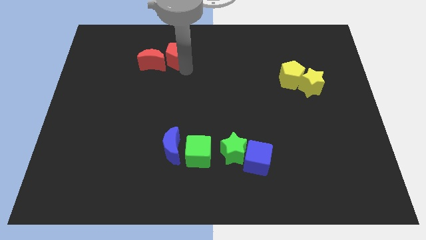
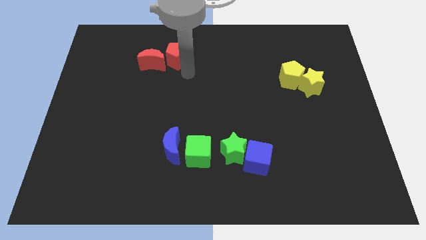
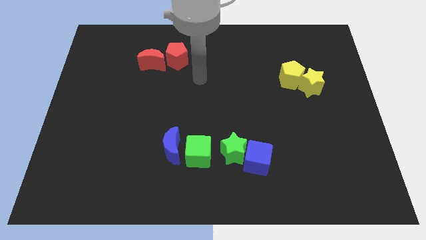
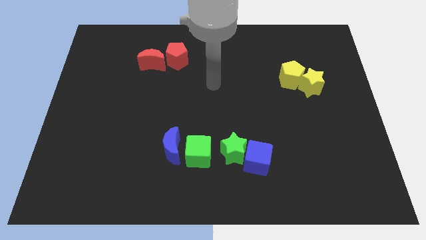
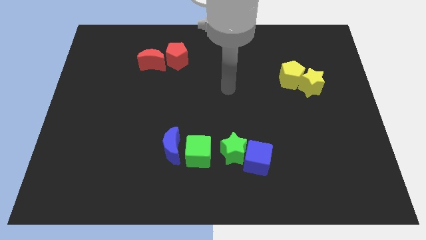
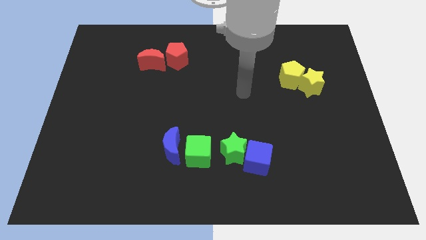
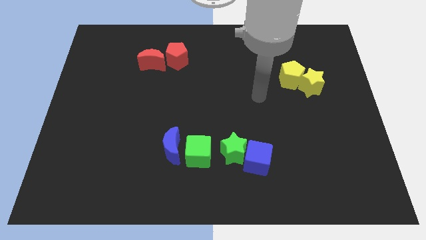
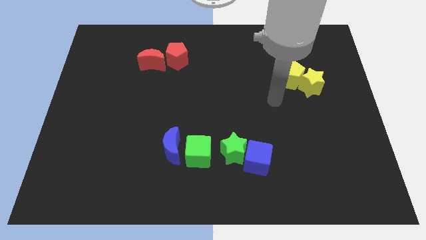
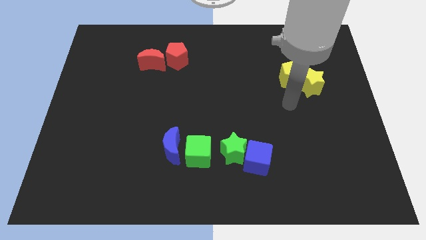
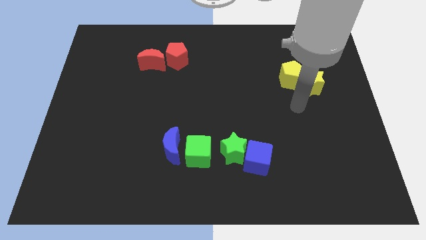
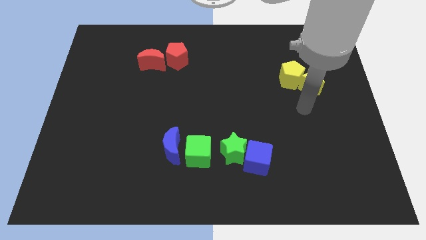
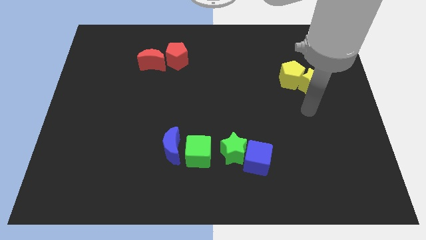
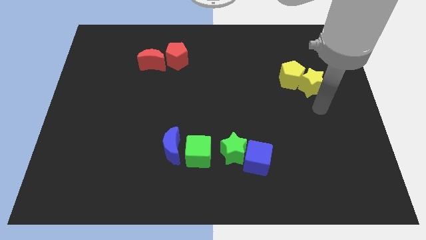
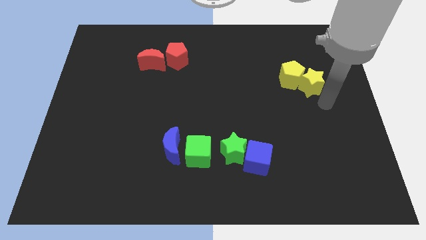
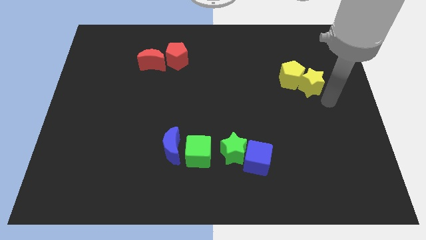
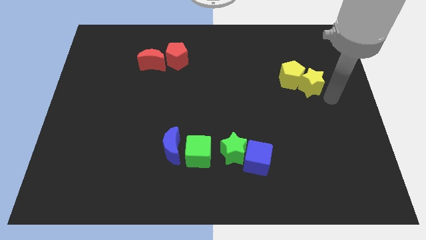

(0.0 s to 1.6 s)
move your arm towards the yellow blocks

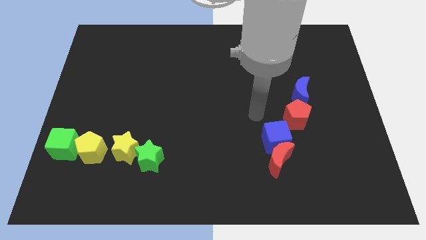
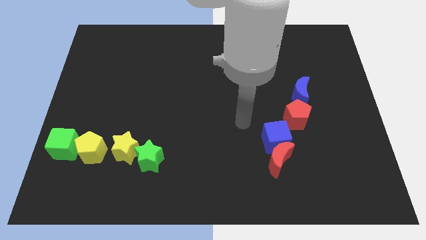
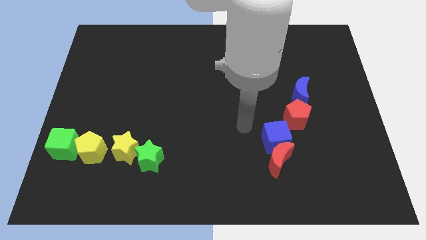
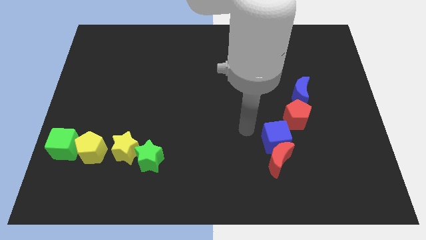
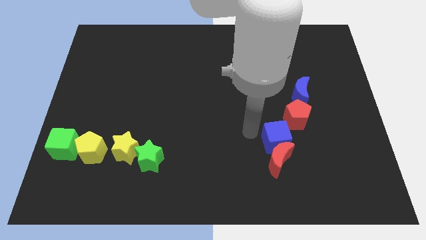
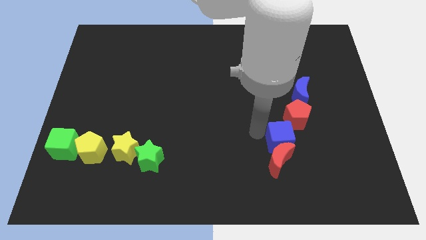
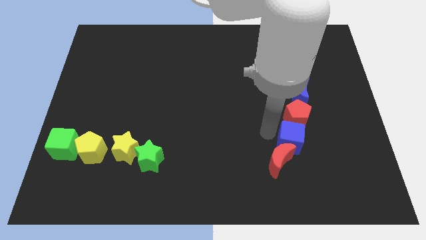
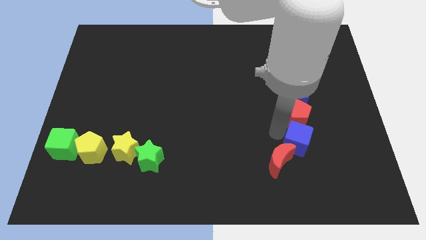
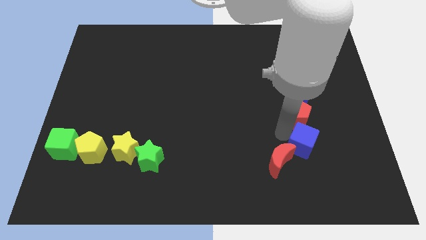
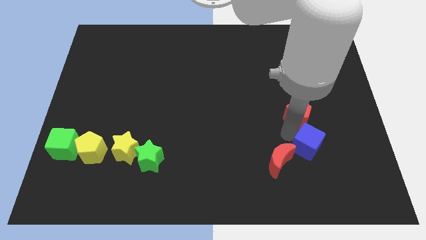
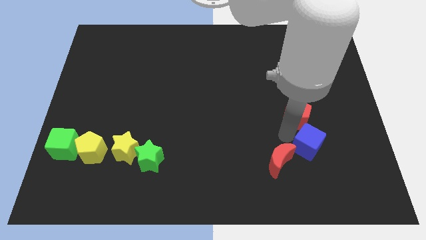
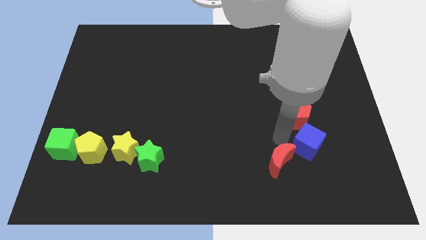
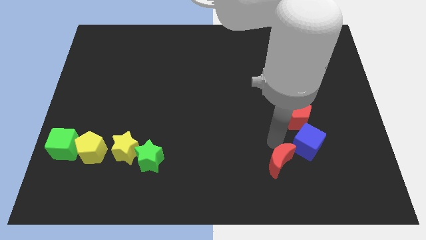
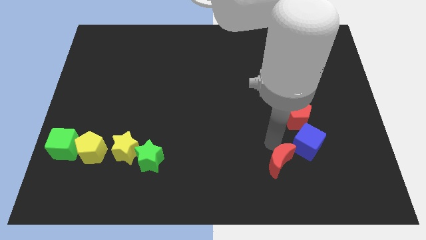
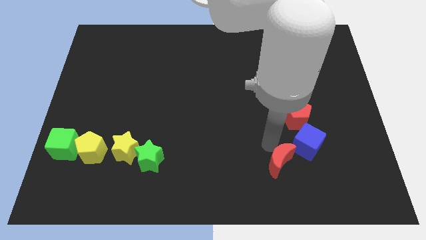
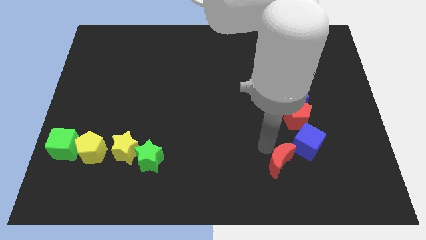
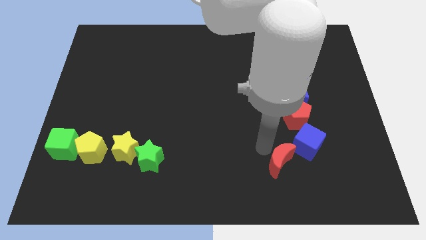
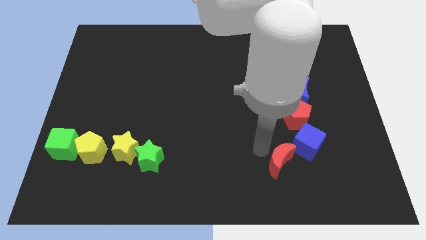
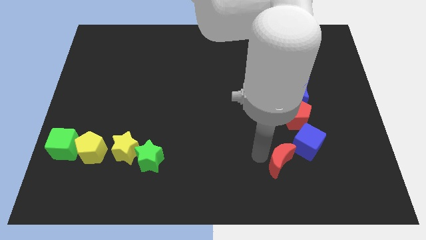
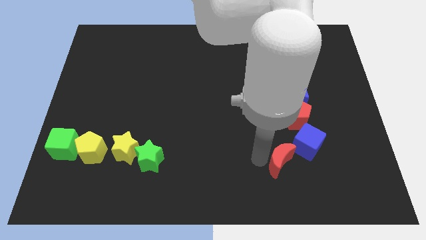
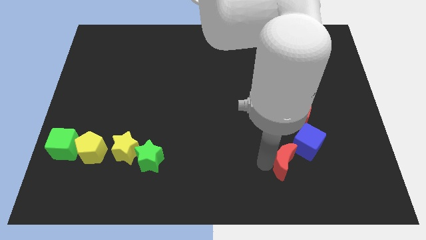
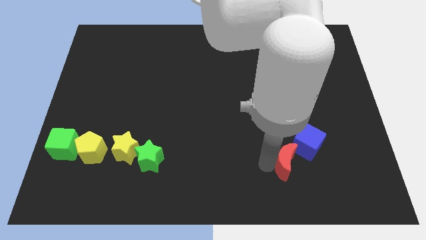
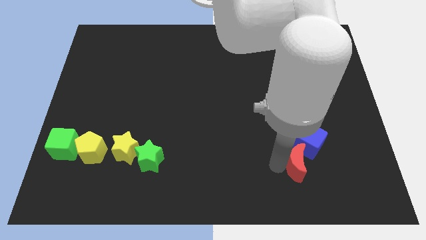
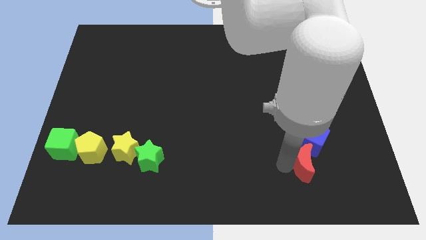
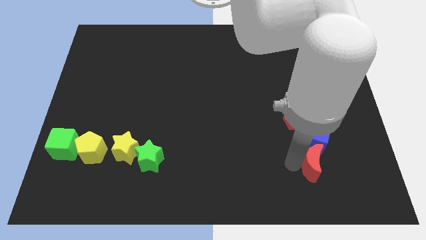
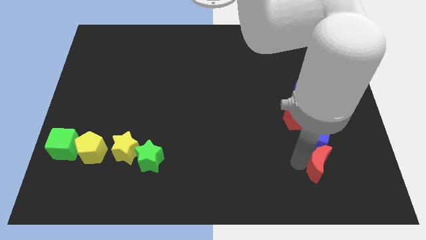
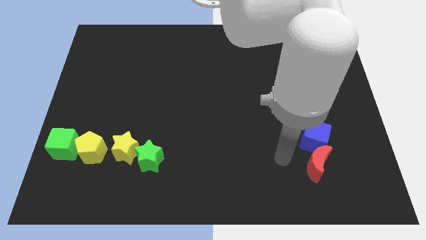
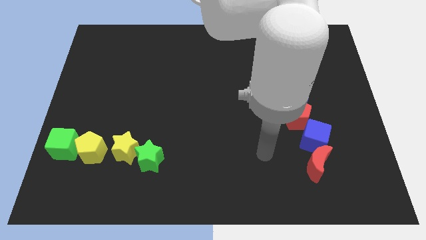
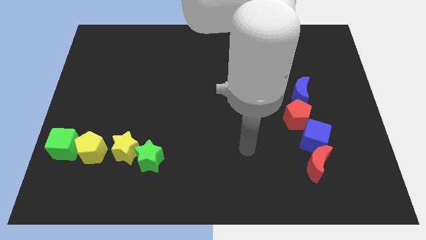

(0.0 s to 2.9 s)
place the blue cube and the red crescent at the bottom right of the red pentagon

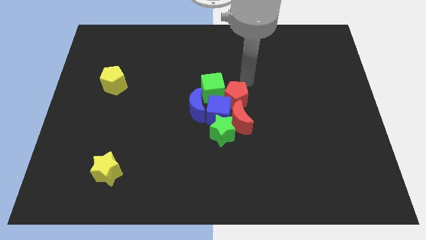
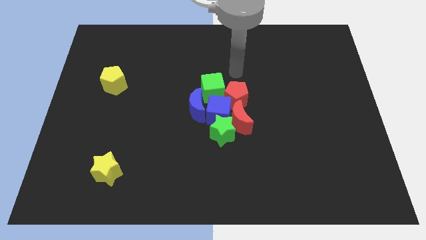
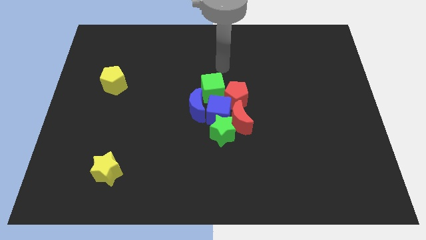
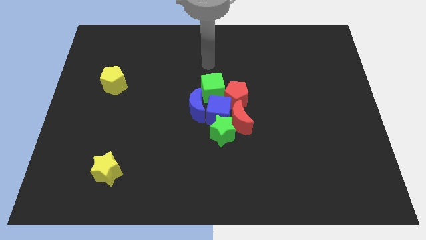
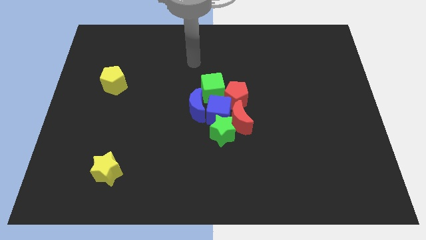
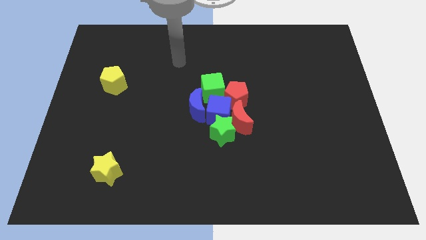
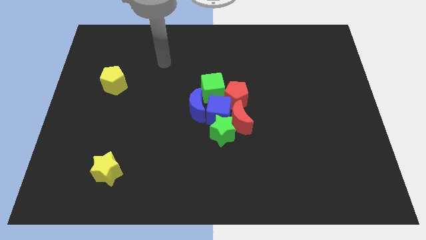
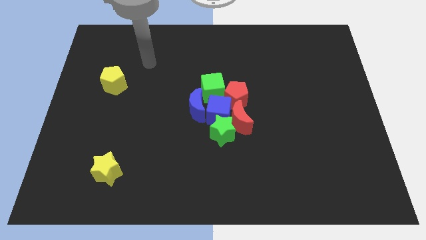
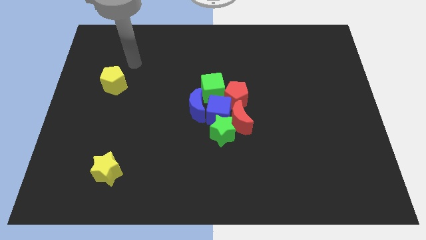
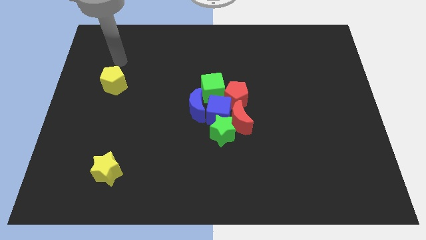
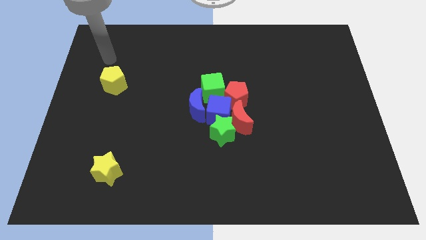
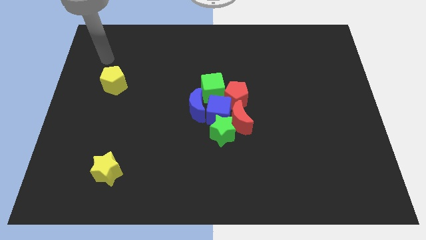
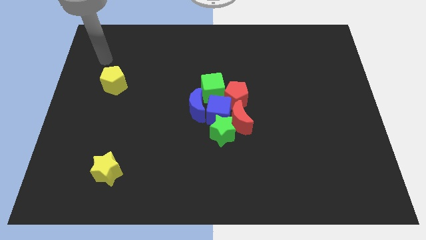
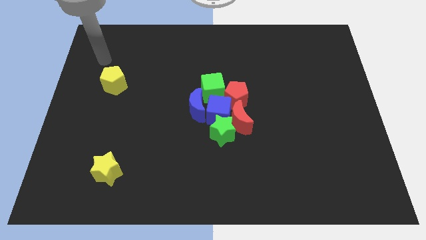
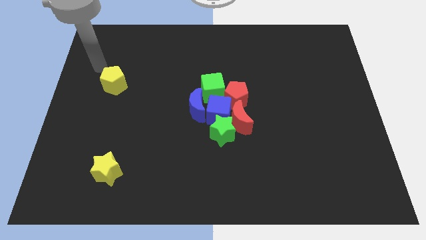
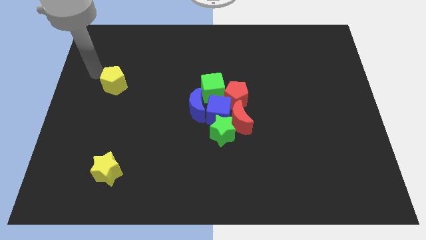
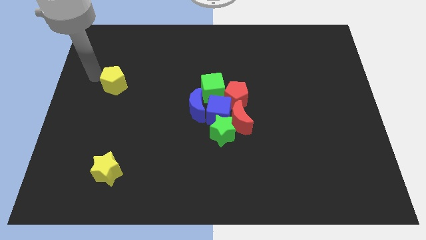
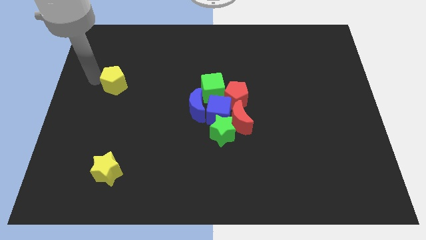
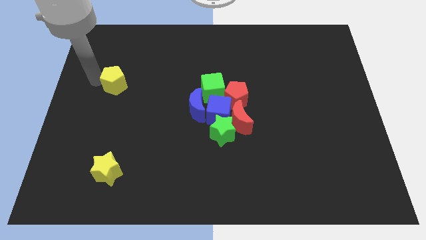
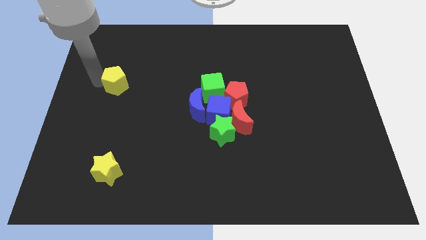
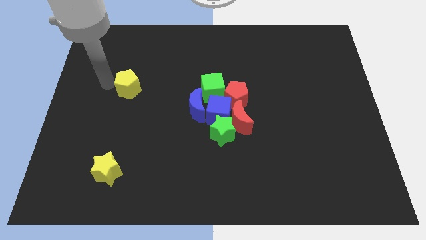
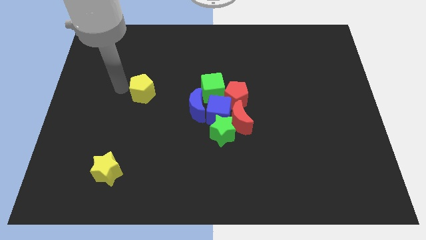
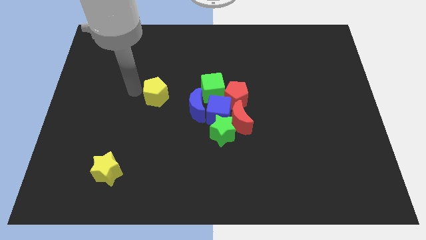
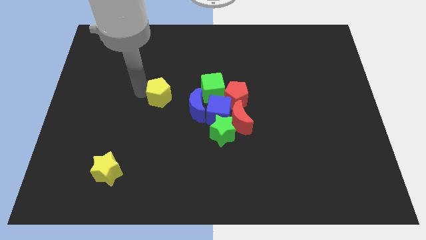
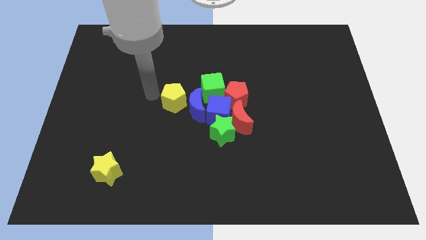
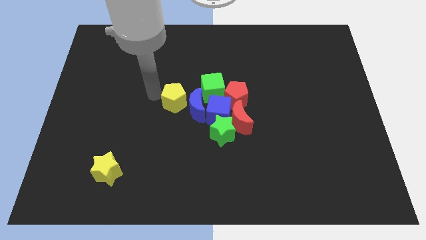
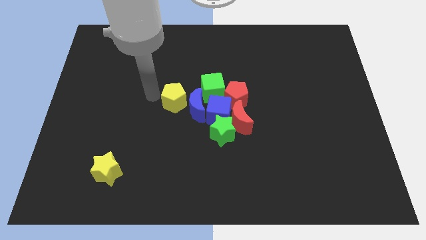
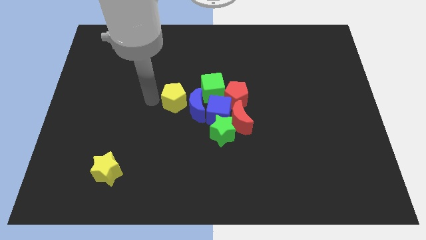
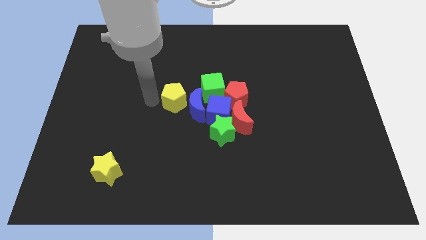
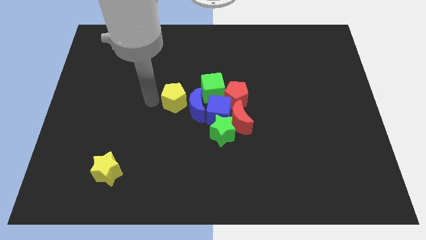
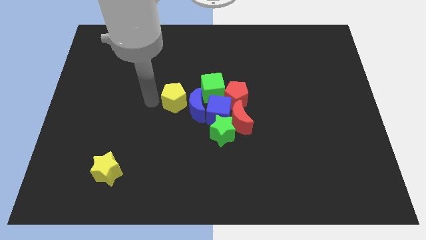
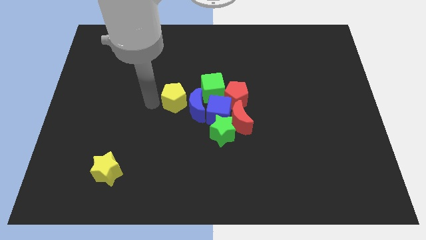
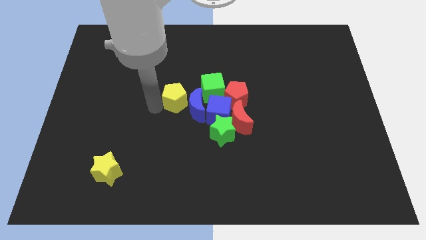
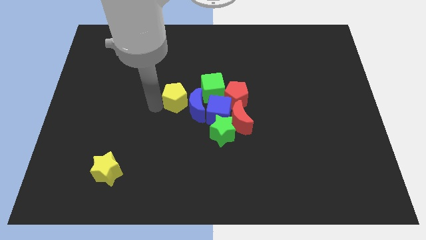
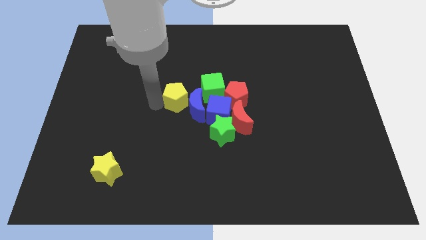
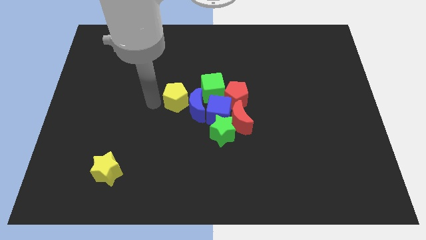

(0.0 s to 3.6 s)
place the yellow pentagon left to the blue moon

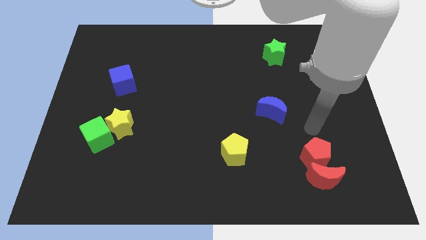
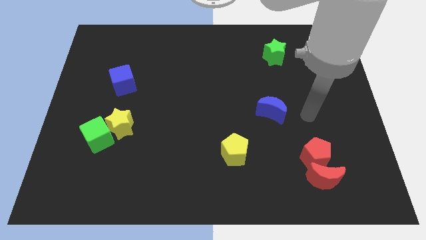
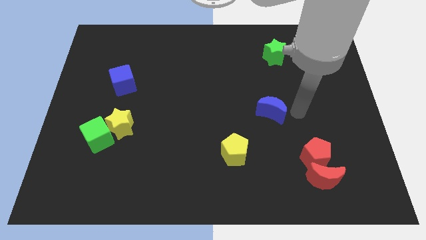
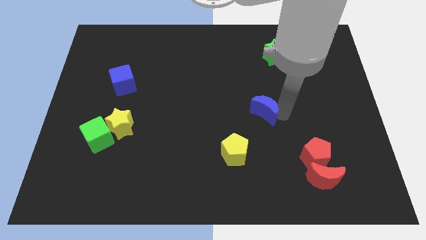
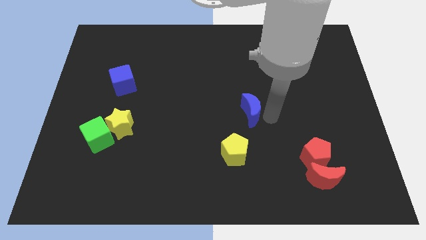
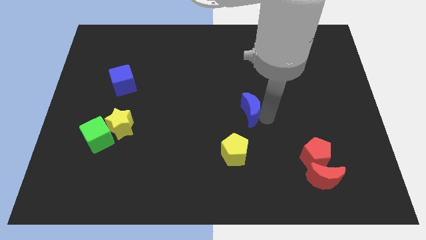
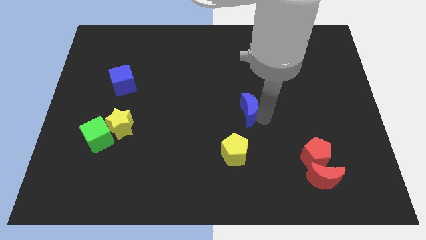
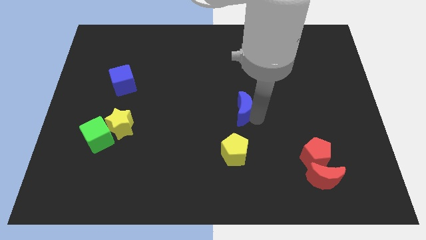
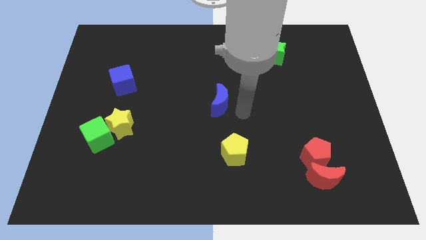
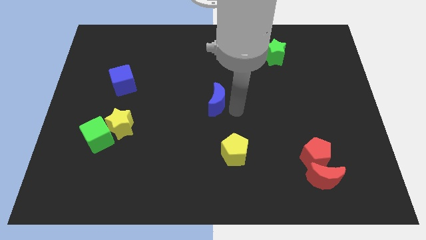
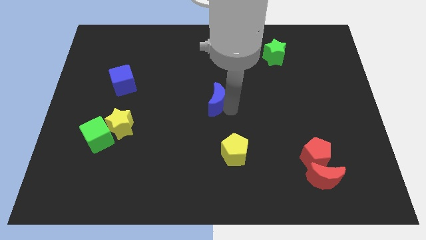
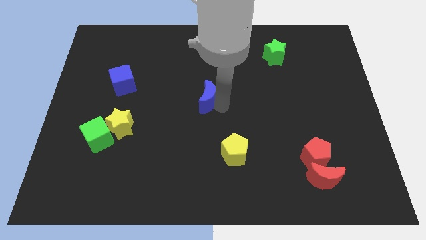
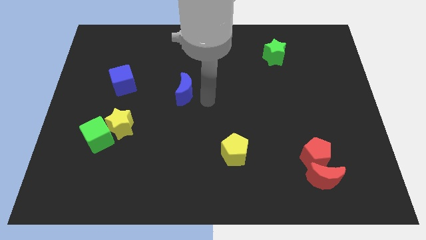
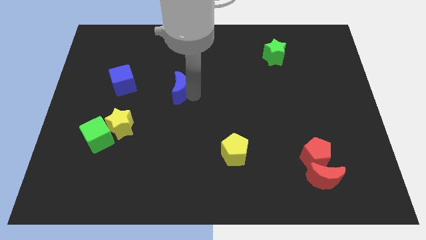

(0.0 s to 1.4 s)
move the blue crescent to the top left of the yellow pentagon
